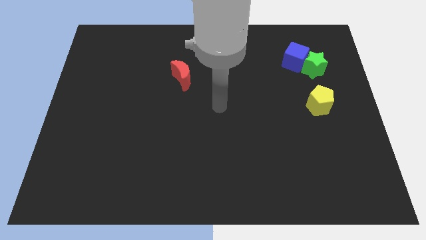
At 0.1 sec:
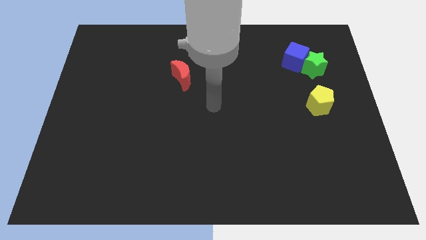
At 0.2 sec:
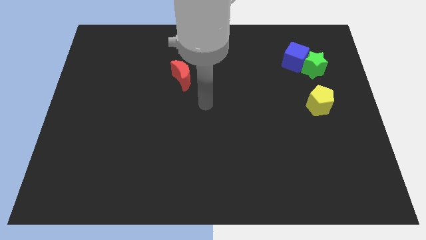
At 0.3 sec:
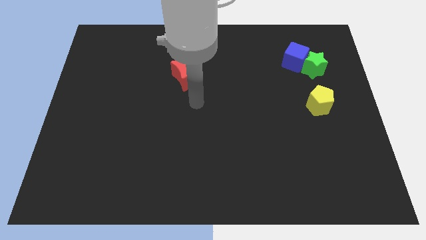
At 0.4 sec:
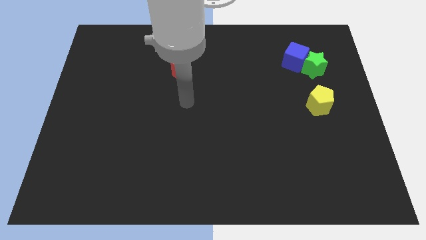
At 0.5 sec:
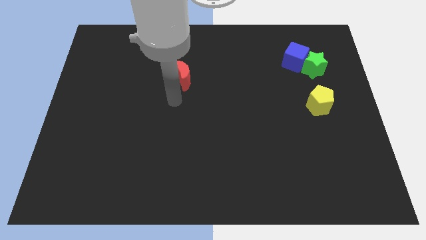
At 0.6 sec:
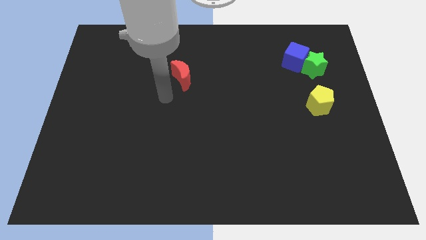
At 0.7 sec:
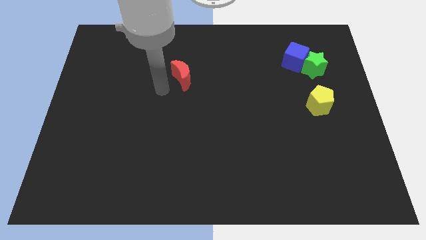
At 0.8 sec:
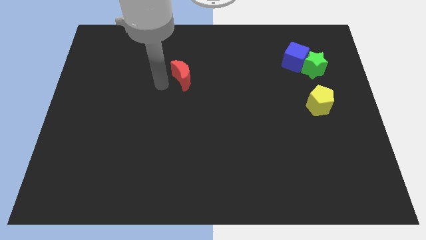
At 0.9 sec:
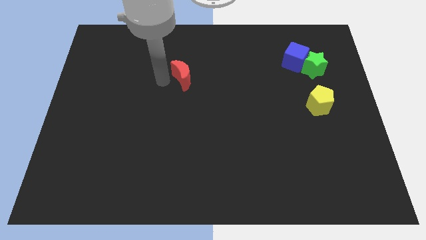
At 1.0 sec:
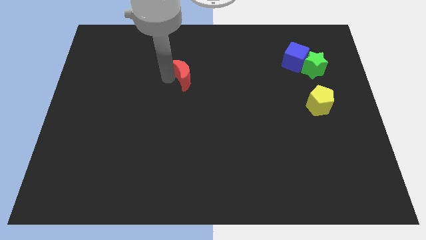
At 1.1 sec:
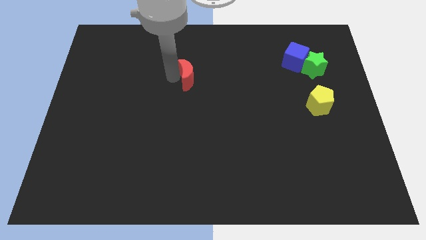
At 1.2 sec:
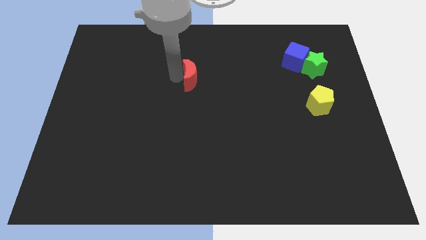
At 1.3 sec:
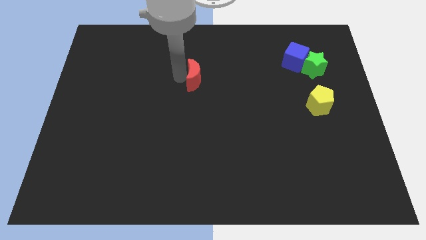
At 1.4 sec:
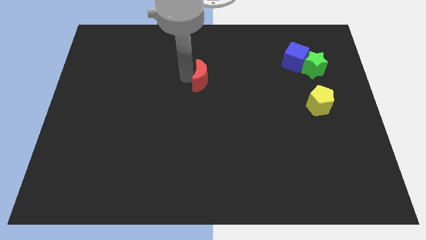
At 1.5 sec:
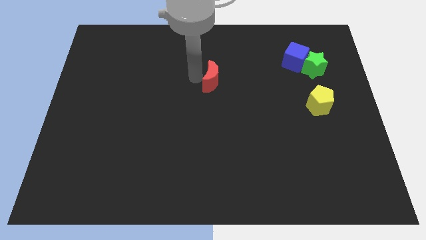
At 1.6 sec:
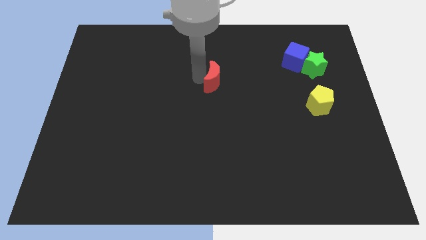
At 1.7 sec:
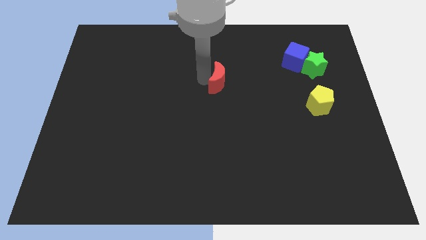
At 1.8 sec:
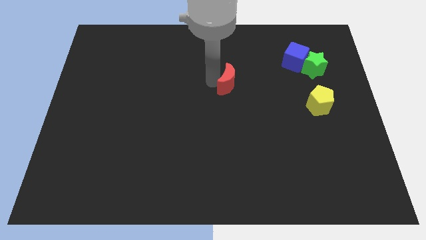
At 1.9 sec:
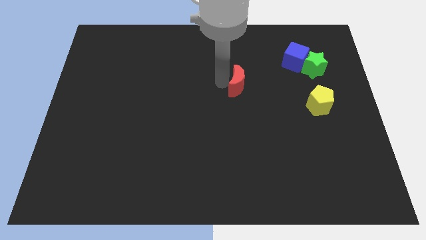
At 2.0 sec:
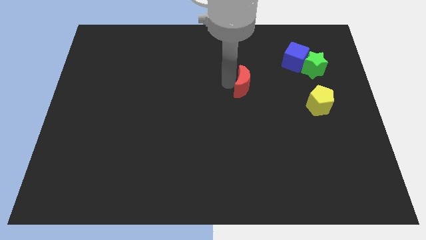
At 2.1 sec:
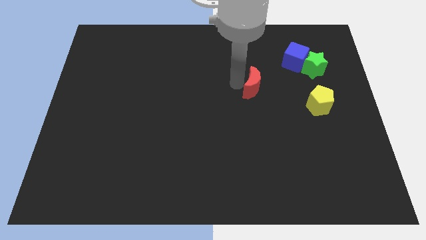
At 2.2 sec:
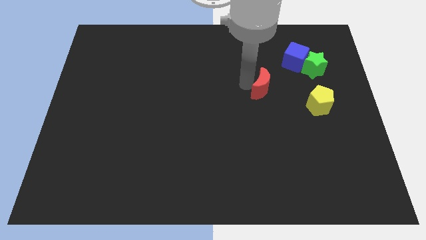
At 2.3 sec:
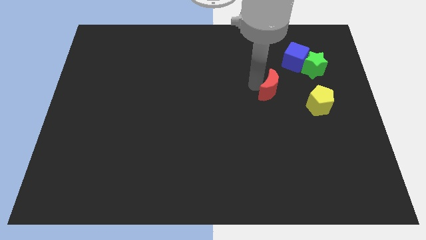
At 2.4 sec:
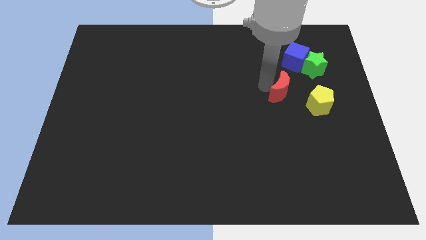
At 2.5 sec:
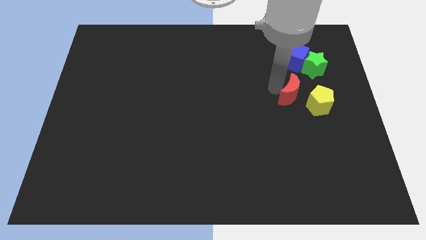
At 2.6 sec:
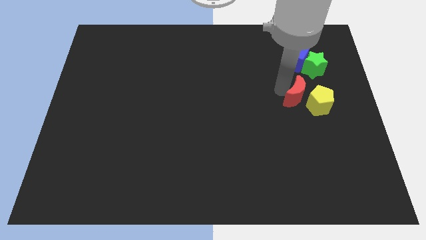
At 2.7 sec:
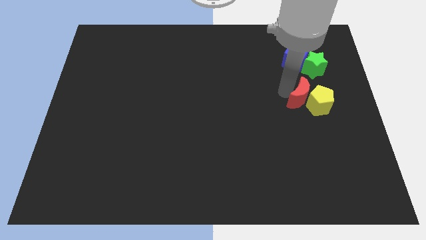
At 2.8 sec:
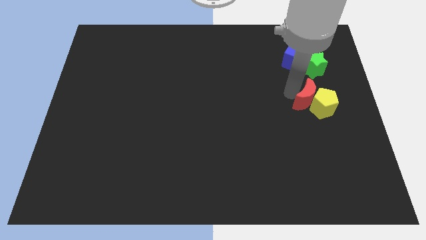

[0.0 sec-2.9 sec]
slide the moon towards the yellow pentagon

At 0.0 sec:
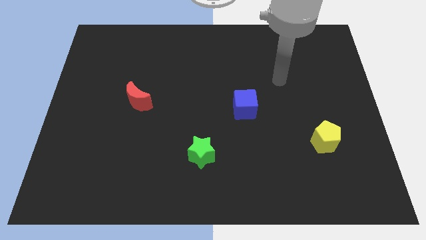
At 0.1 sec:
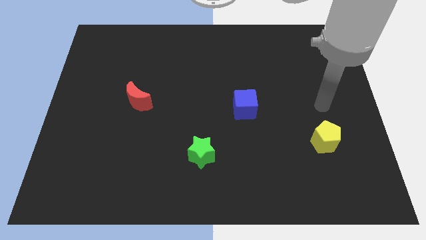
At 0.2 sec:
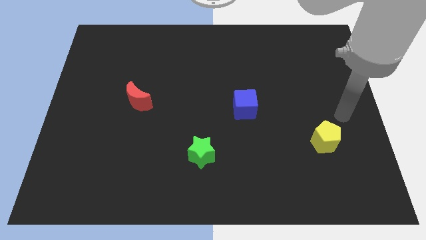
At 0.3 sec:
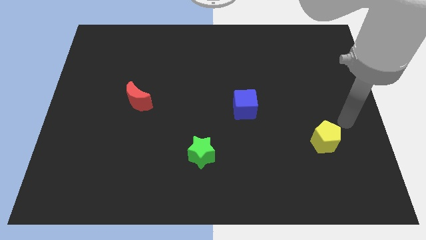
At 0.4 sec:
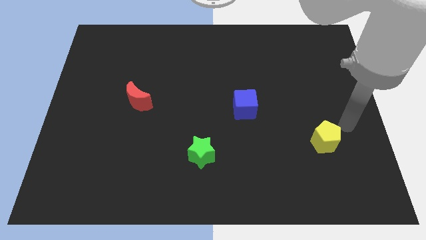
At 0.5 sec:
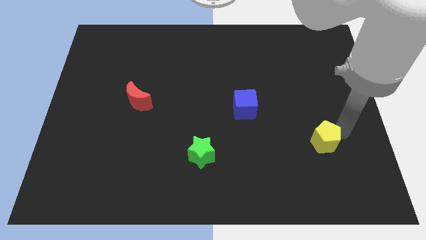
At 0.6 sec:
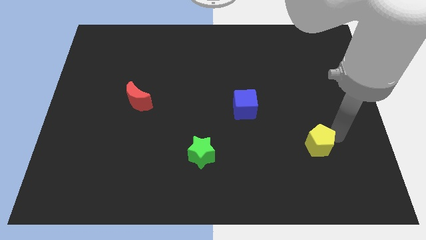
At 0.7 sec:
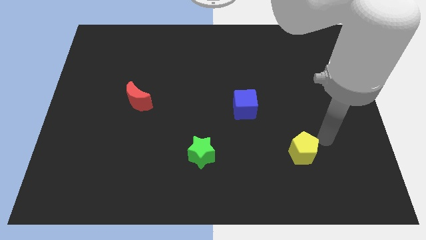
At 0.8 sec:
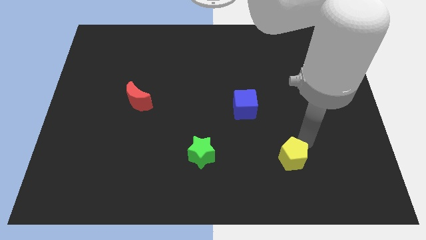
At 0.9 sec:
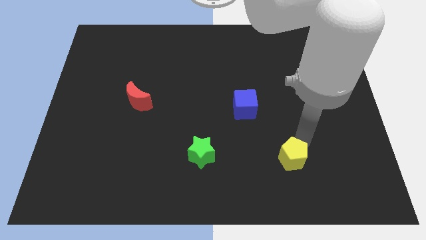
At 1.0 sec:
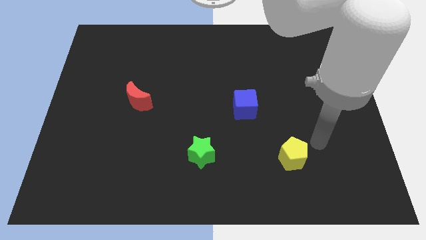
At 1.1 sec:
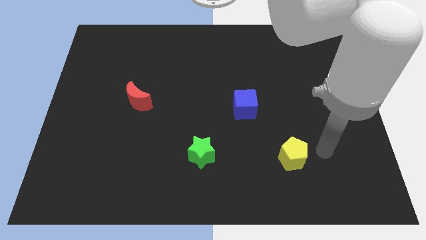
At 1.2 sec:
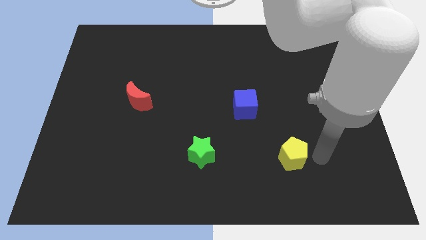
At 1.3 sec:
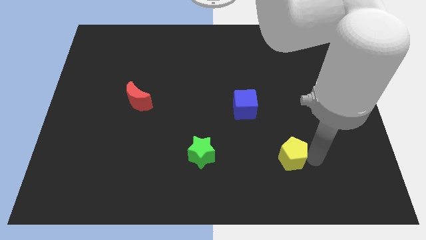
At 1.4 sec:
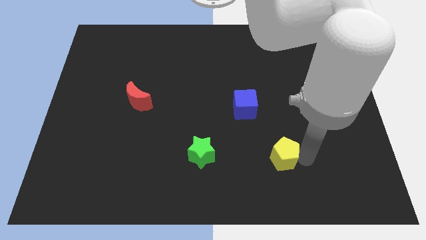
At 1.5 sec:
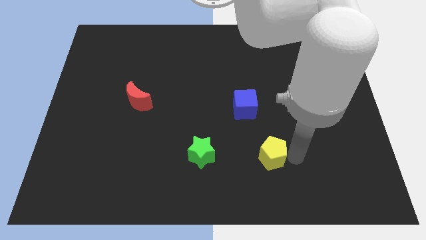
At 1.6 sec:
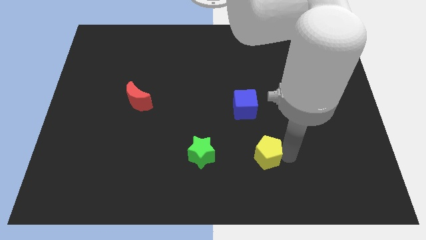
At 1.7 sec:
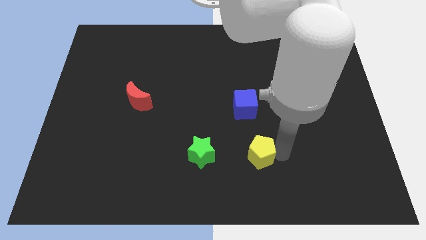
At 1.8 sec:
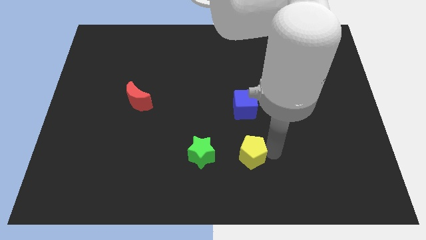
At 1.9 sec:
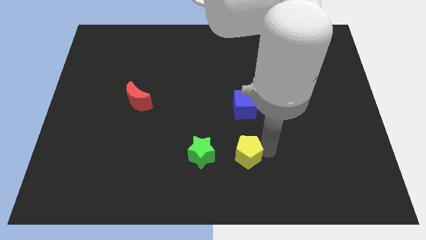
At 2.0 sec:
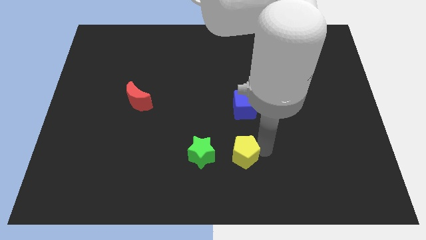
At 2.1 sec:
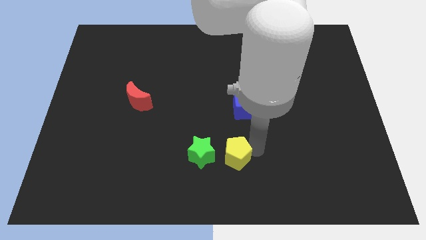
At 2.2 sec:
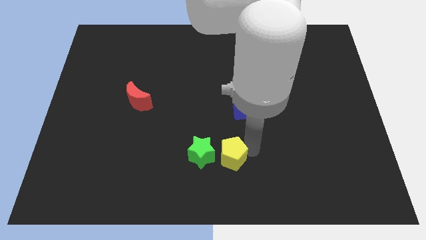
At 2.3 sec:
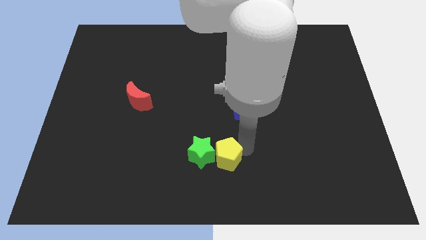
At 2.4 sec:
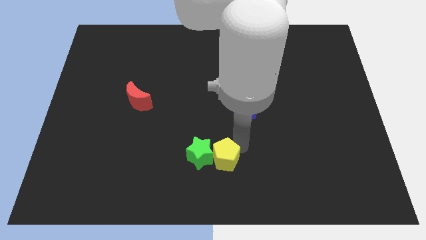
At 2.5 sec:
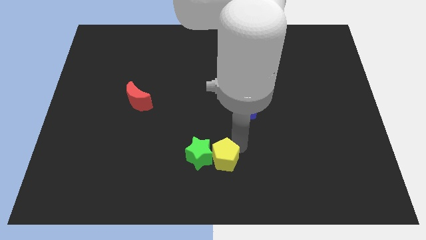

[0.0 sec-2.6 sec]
move the yellow block towards the green block

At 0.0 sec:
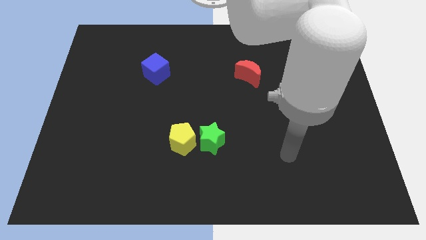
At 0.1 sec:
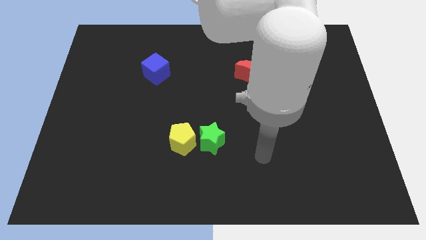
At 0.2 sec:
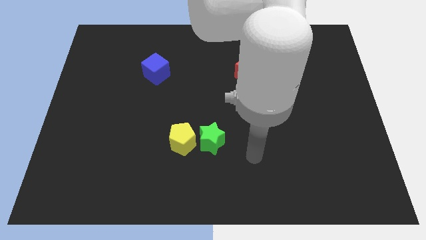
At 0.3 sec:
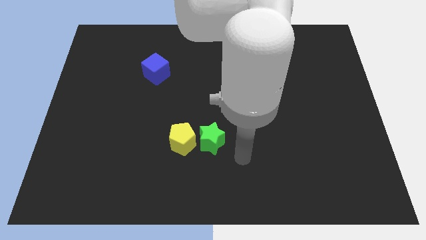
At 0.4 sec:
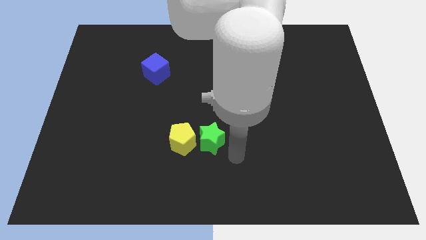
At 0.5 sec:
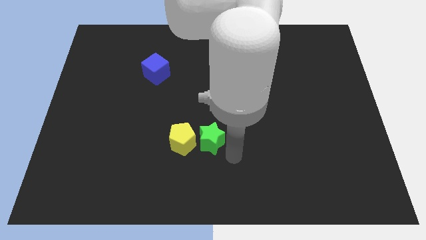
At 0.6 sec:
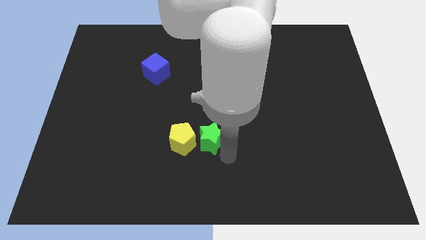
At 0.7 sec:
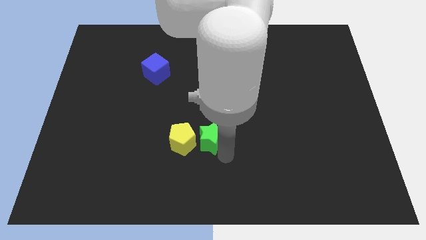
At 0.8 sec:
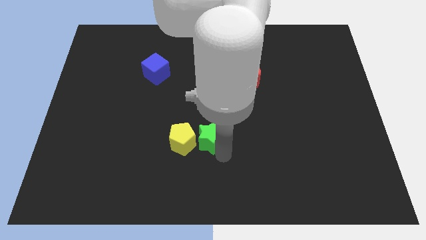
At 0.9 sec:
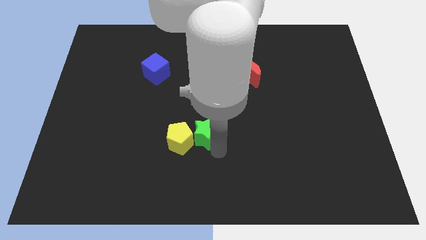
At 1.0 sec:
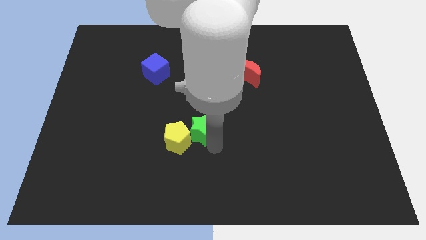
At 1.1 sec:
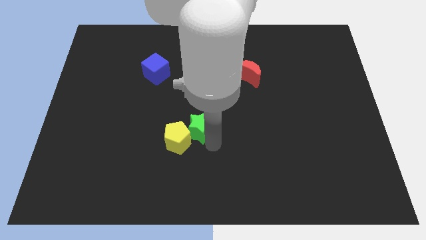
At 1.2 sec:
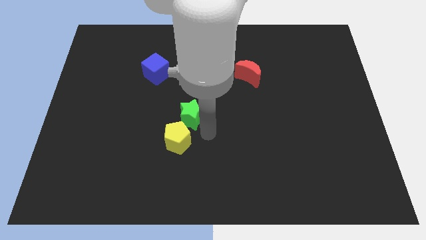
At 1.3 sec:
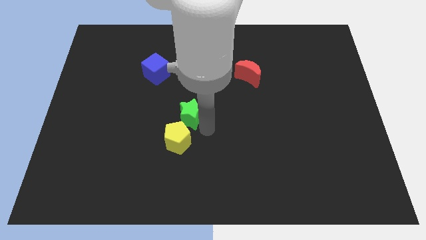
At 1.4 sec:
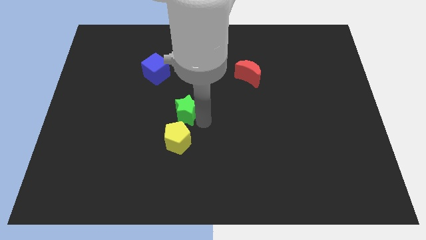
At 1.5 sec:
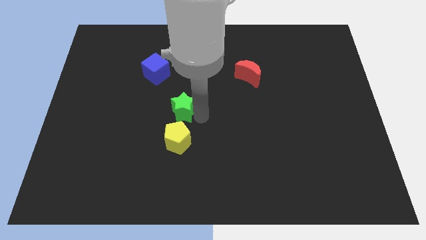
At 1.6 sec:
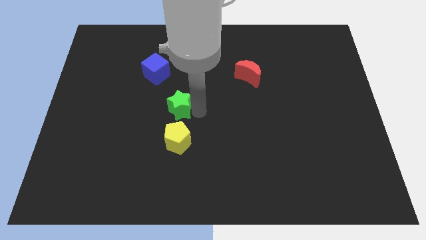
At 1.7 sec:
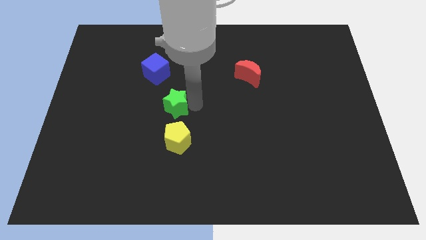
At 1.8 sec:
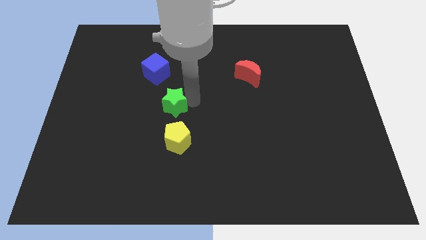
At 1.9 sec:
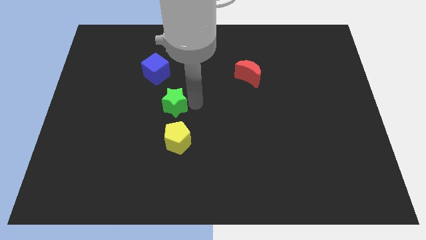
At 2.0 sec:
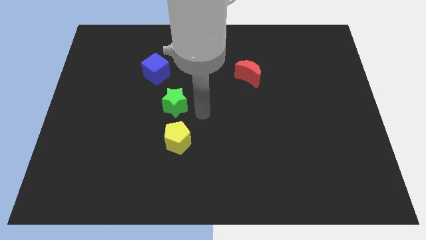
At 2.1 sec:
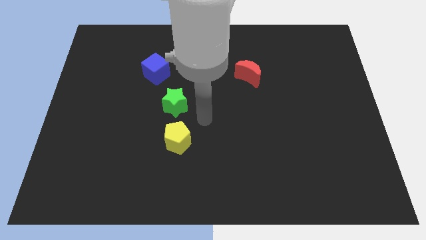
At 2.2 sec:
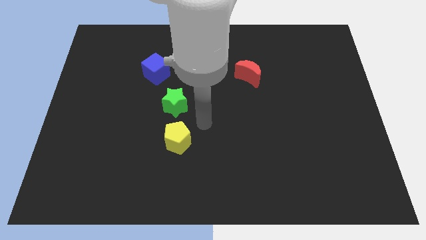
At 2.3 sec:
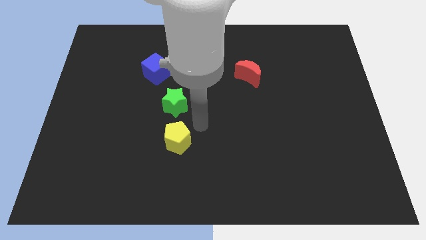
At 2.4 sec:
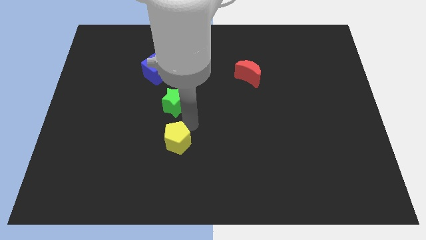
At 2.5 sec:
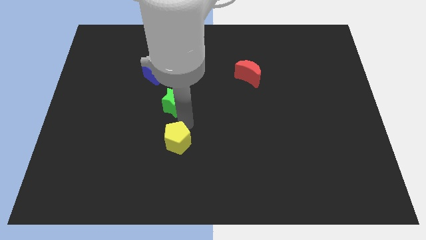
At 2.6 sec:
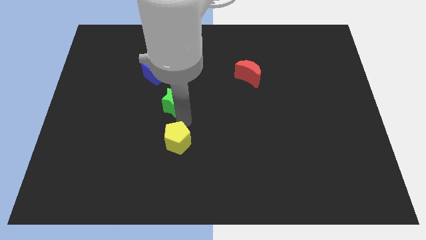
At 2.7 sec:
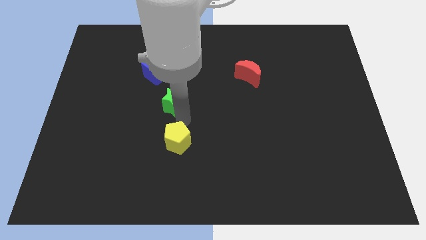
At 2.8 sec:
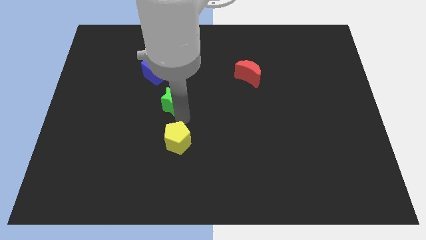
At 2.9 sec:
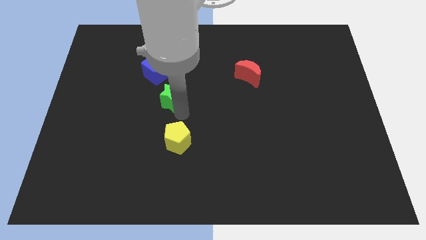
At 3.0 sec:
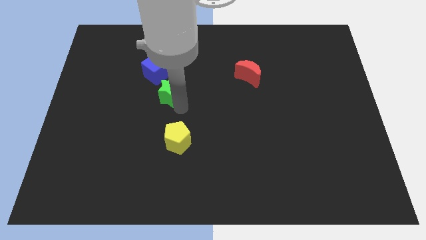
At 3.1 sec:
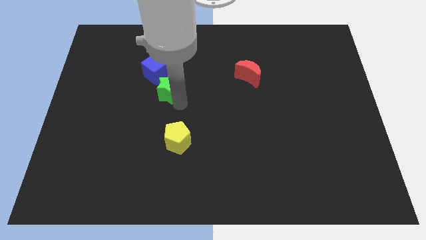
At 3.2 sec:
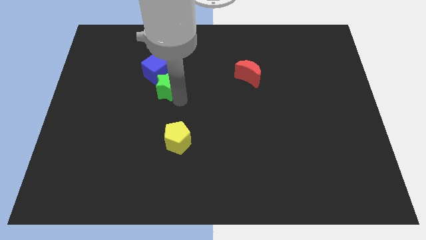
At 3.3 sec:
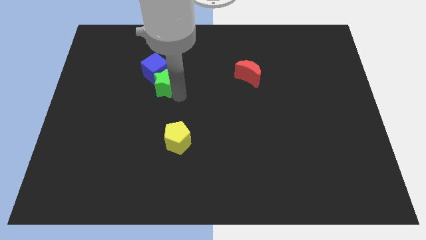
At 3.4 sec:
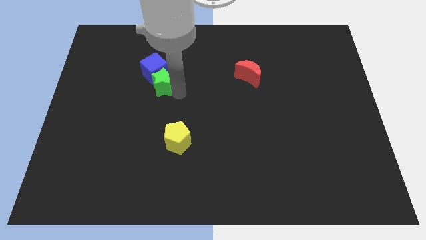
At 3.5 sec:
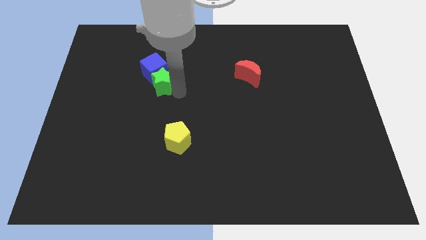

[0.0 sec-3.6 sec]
slide the star towards the cube
